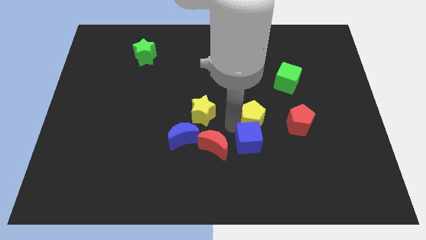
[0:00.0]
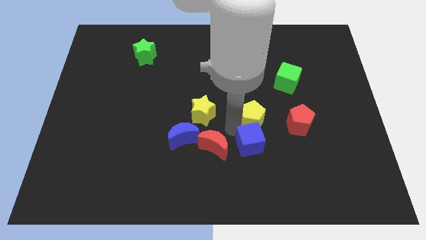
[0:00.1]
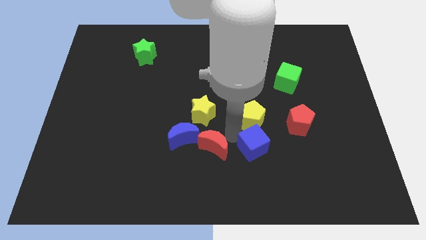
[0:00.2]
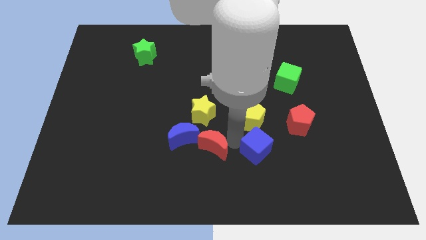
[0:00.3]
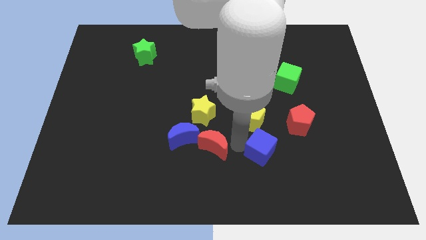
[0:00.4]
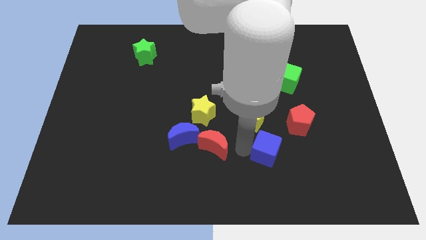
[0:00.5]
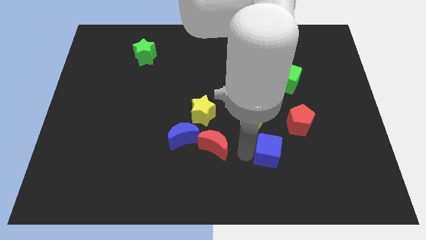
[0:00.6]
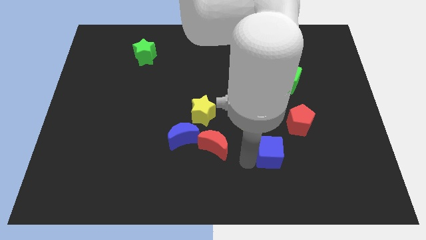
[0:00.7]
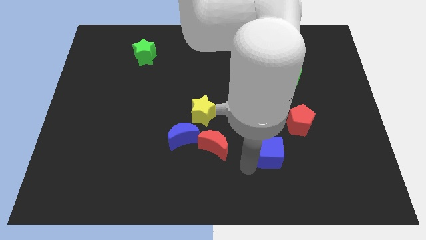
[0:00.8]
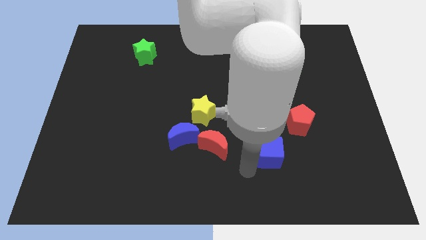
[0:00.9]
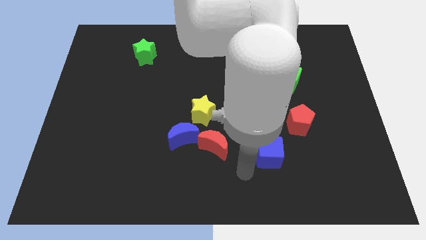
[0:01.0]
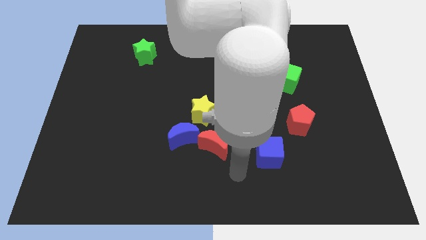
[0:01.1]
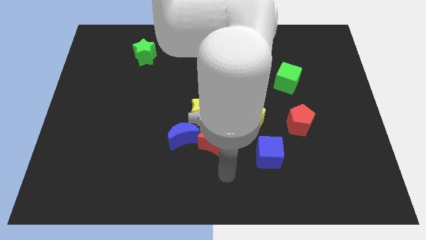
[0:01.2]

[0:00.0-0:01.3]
separate blue cube from yellow pentagon

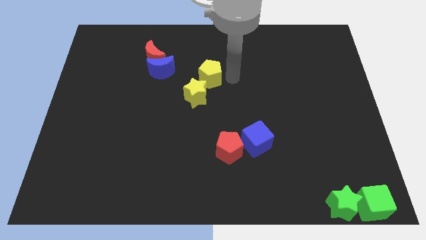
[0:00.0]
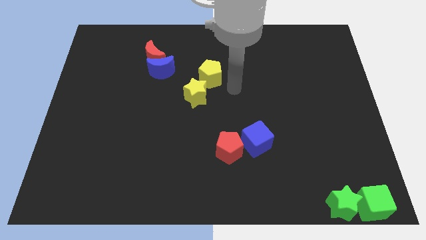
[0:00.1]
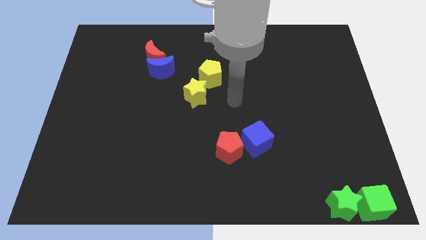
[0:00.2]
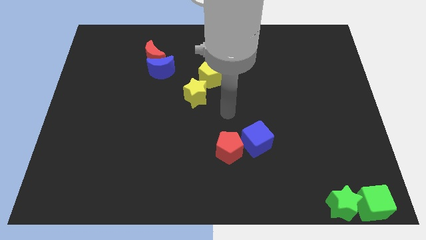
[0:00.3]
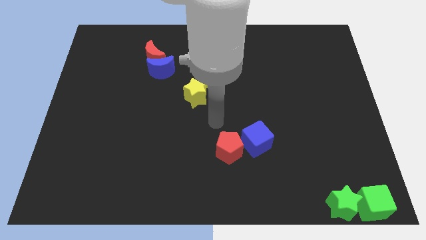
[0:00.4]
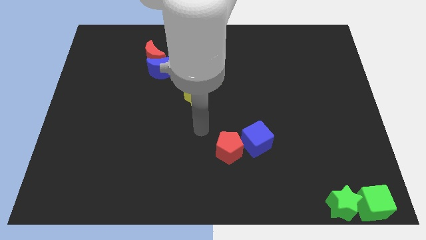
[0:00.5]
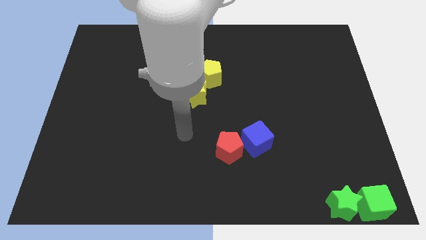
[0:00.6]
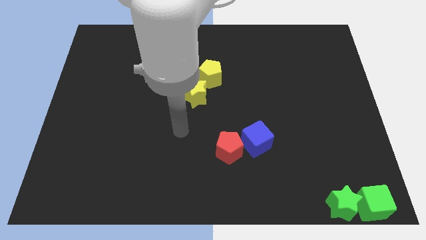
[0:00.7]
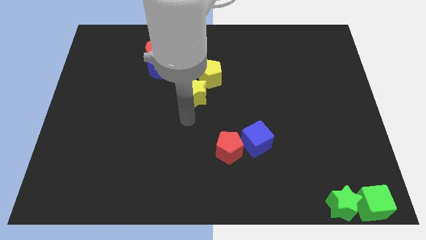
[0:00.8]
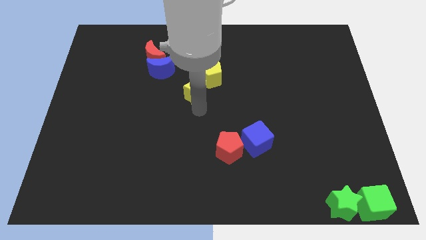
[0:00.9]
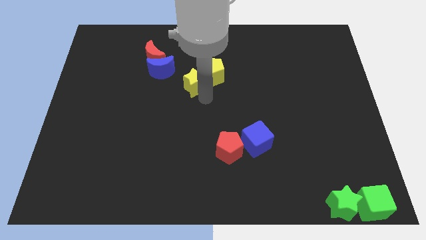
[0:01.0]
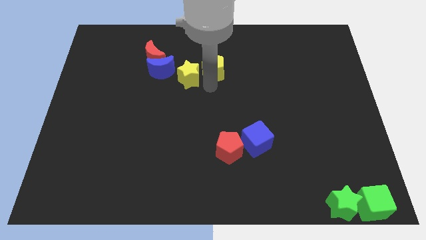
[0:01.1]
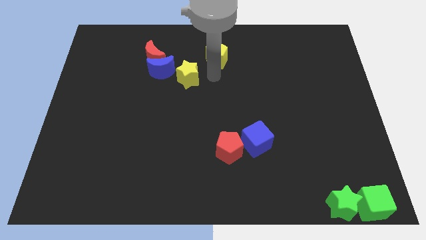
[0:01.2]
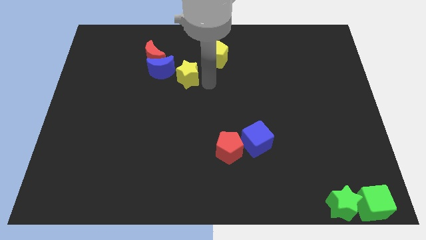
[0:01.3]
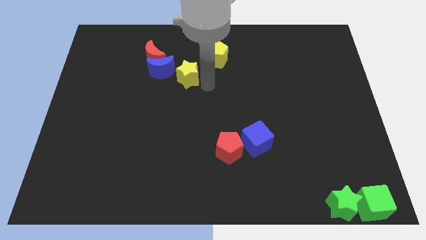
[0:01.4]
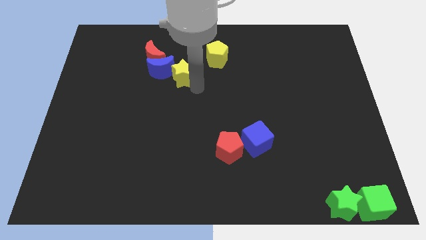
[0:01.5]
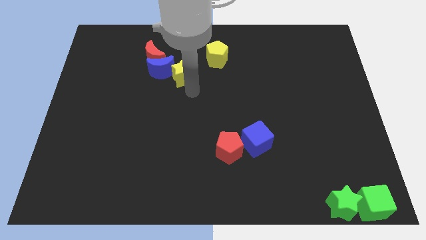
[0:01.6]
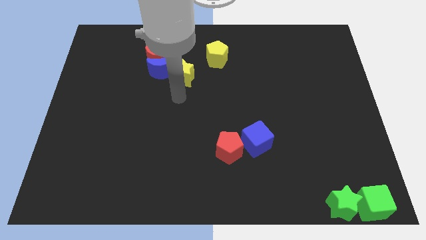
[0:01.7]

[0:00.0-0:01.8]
separate the yellow star and yellow pentagon

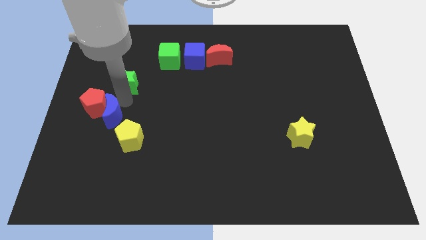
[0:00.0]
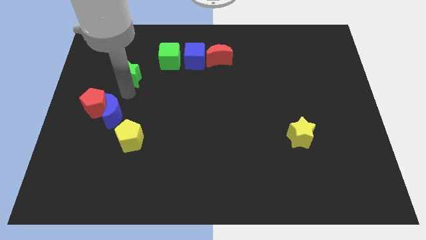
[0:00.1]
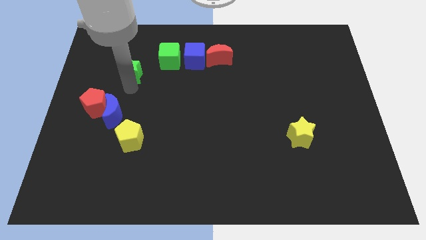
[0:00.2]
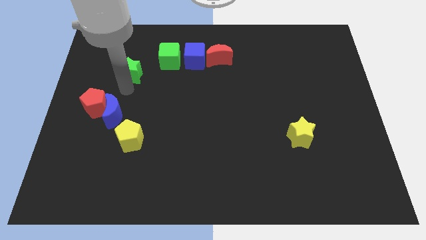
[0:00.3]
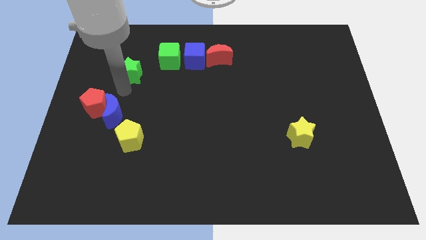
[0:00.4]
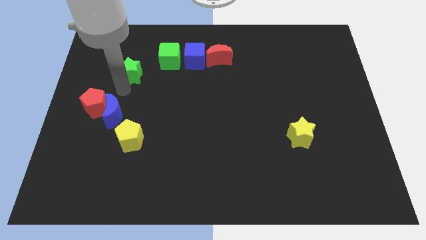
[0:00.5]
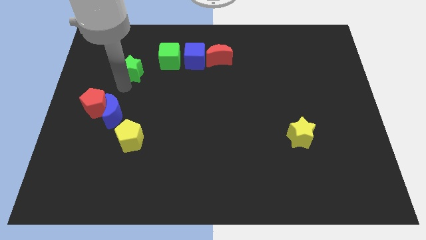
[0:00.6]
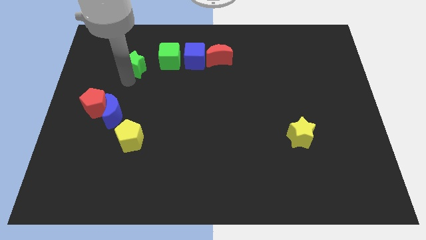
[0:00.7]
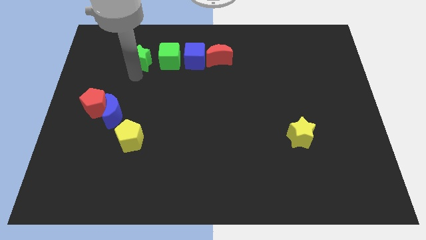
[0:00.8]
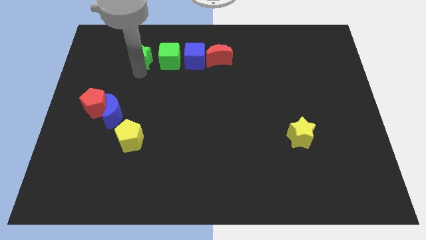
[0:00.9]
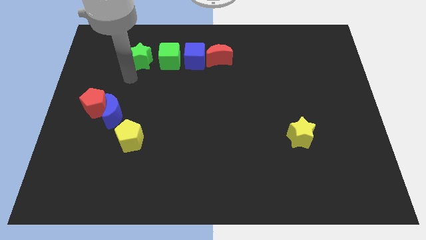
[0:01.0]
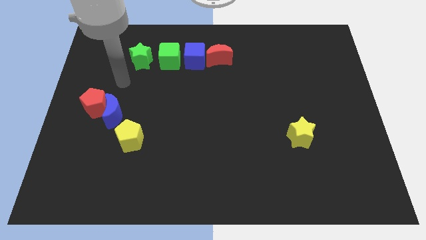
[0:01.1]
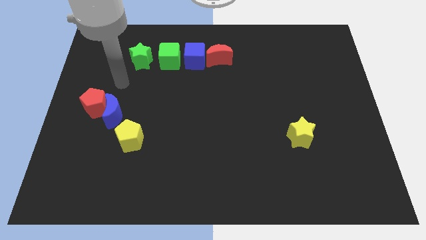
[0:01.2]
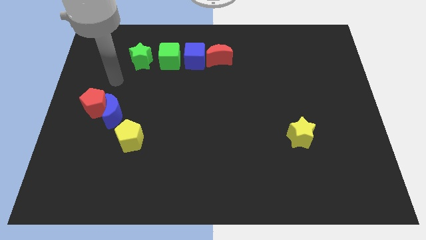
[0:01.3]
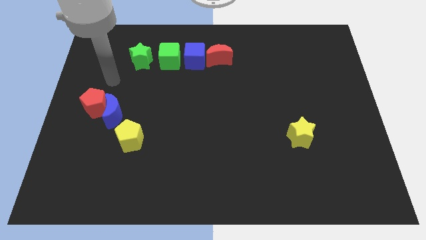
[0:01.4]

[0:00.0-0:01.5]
push the green star to the left of green cube

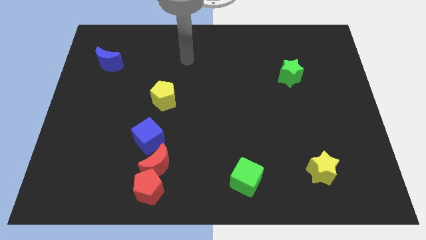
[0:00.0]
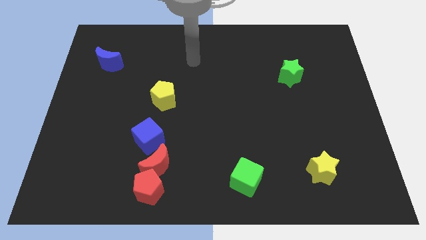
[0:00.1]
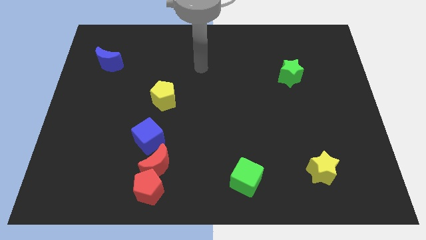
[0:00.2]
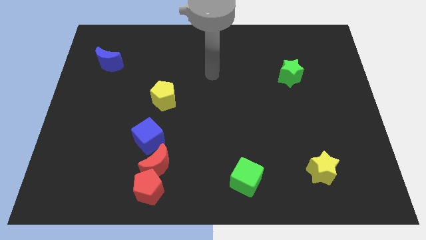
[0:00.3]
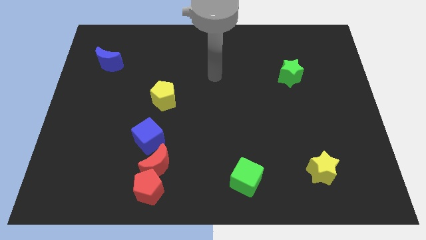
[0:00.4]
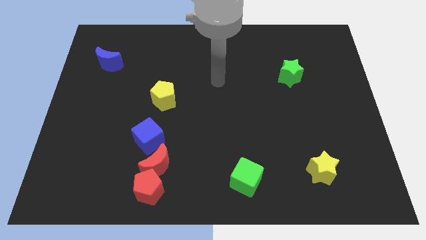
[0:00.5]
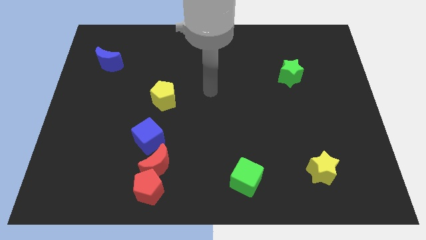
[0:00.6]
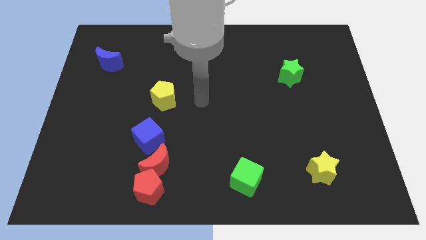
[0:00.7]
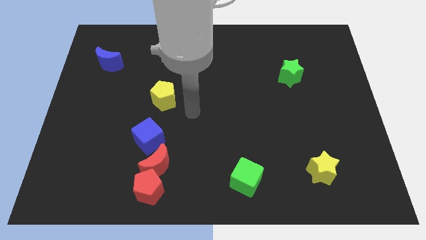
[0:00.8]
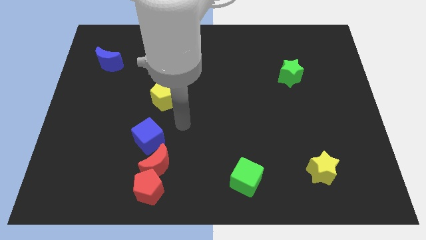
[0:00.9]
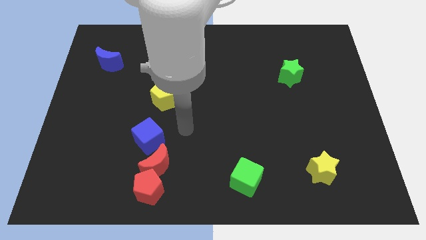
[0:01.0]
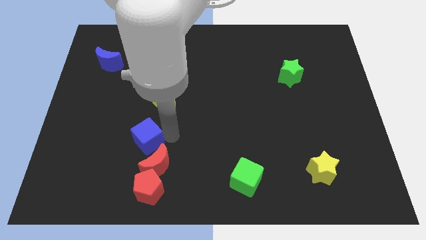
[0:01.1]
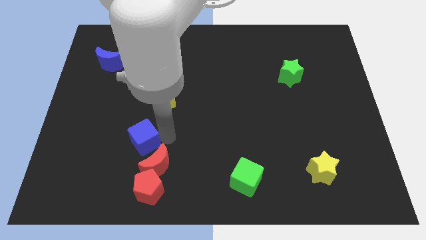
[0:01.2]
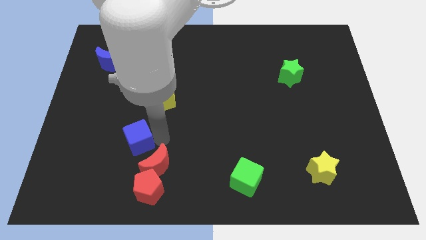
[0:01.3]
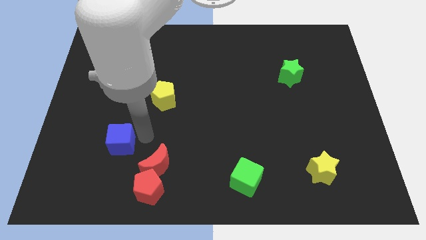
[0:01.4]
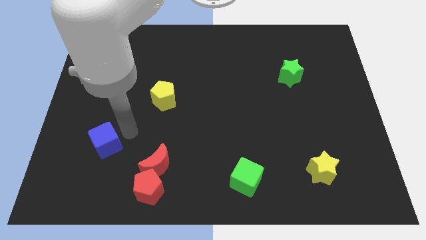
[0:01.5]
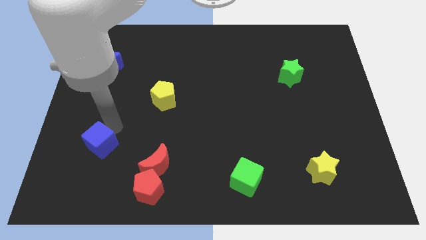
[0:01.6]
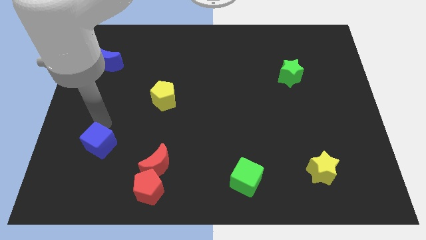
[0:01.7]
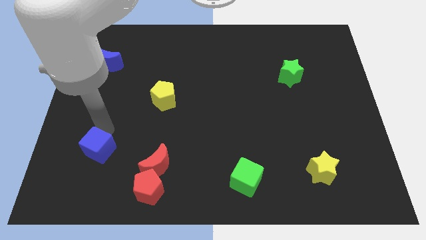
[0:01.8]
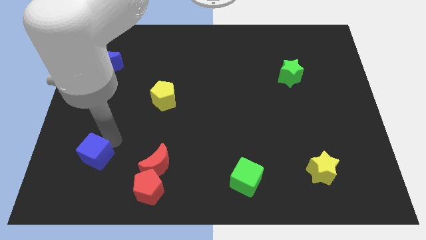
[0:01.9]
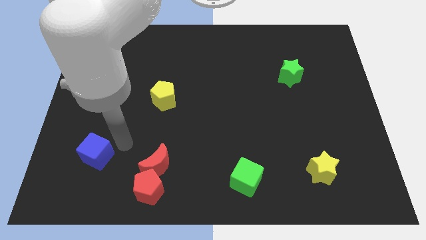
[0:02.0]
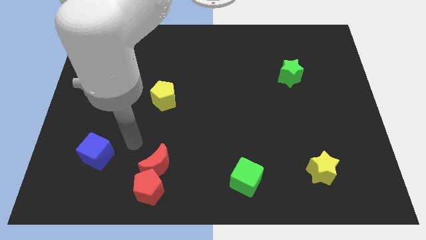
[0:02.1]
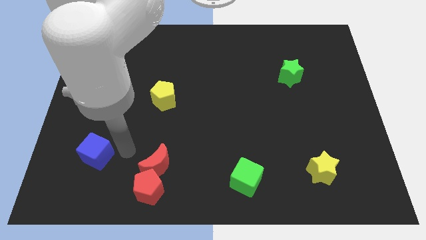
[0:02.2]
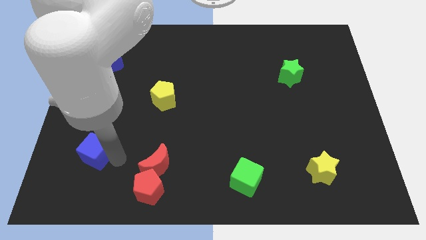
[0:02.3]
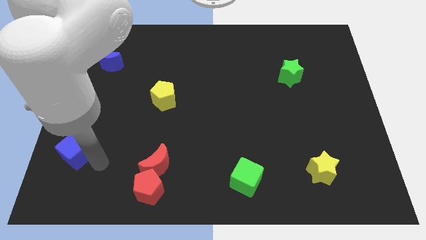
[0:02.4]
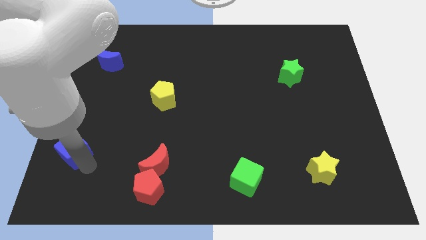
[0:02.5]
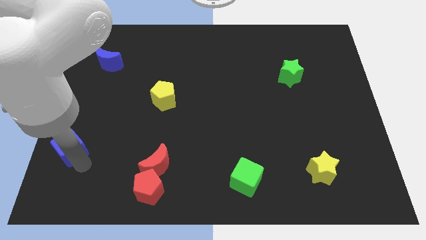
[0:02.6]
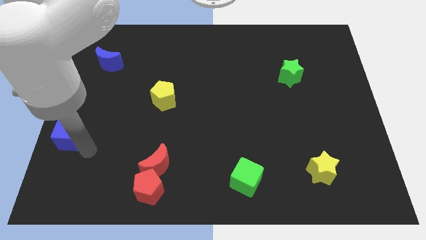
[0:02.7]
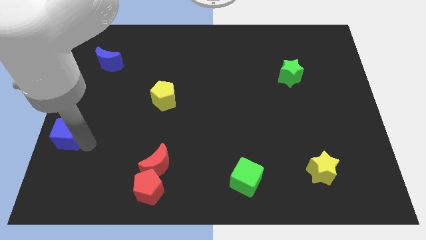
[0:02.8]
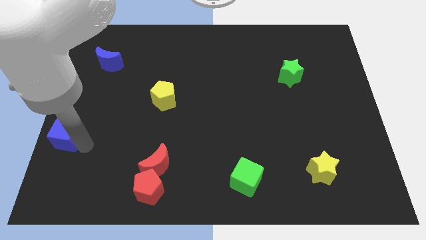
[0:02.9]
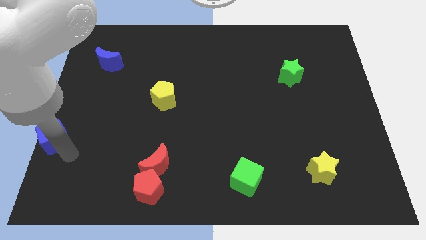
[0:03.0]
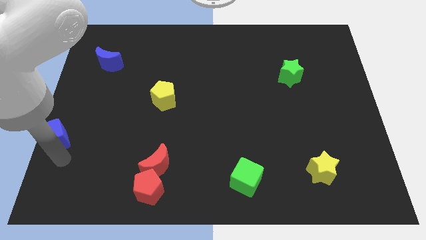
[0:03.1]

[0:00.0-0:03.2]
push the blue cube towards the center left of the board

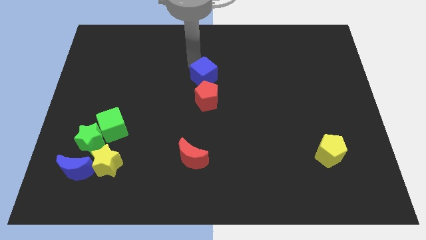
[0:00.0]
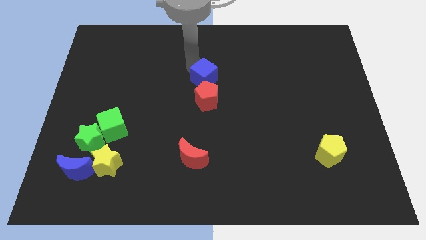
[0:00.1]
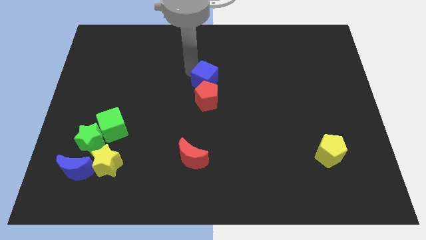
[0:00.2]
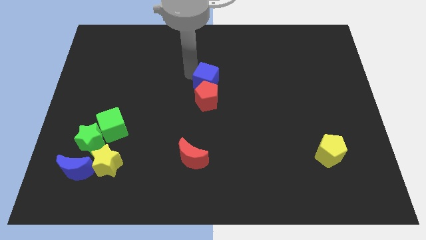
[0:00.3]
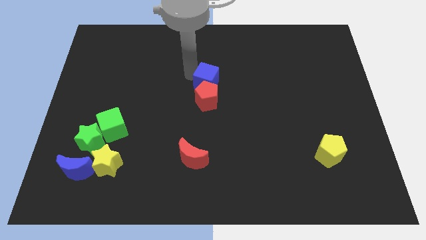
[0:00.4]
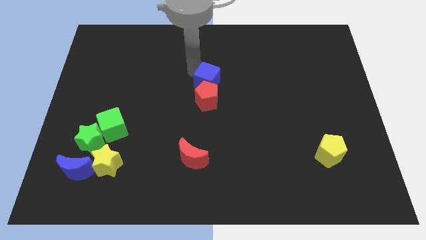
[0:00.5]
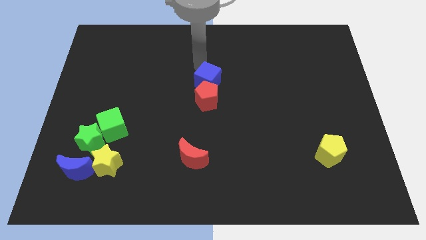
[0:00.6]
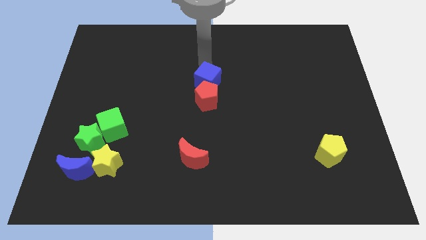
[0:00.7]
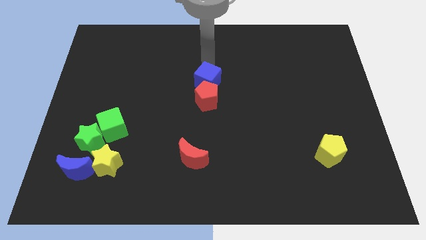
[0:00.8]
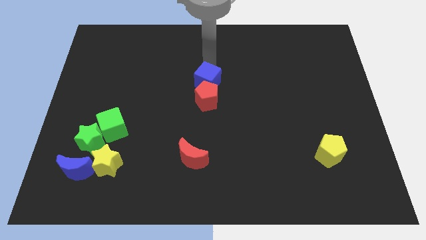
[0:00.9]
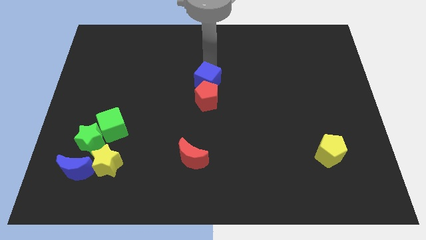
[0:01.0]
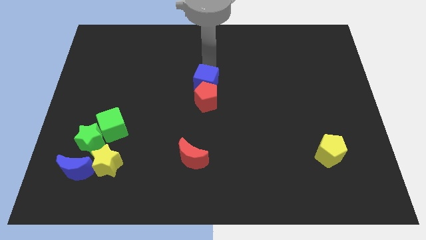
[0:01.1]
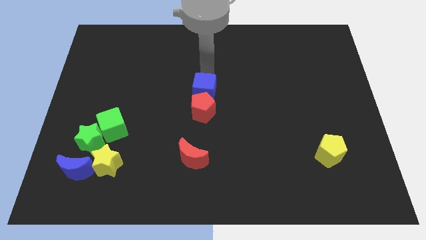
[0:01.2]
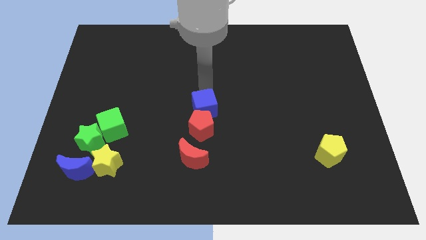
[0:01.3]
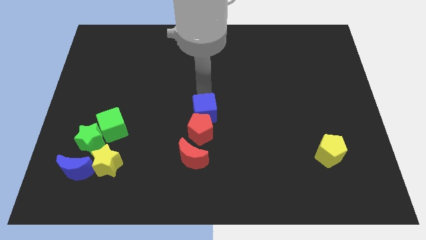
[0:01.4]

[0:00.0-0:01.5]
push the blue cube into the red pentagon
